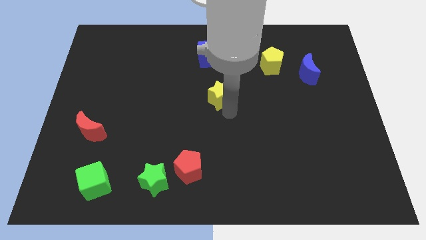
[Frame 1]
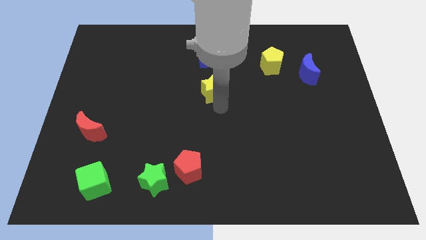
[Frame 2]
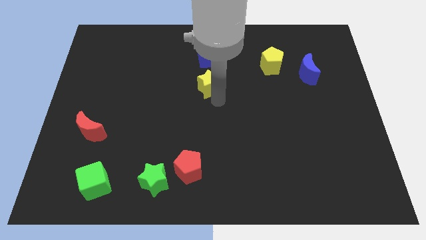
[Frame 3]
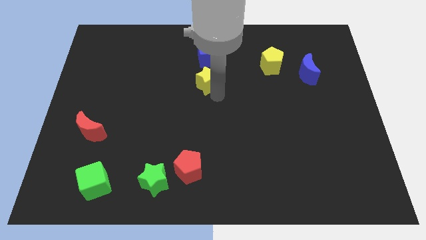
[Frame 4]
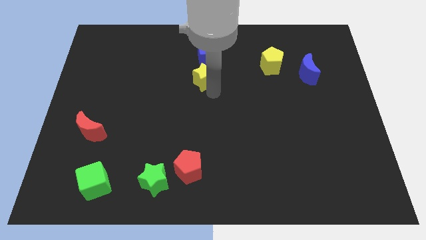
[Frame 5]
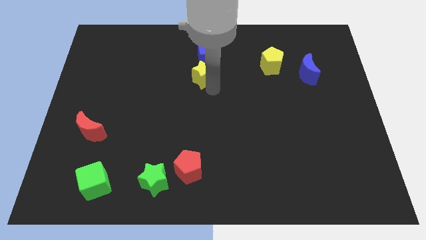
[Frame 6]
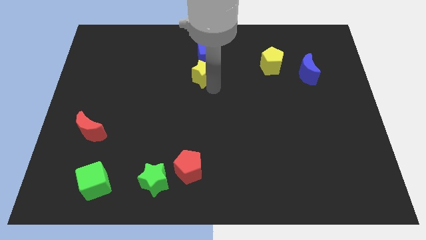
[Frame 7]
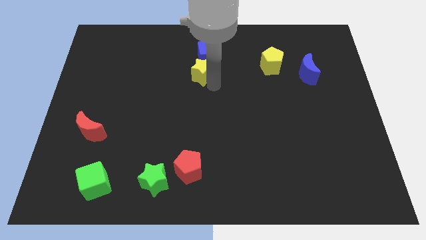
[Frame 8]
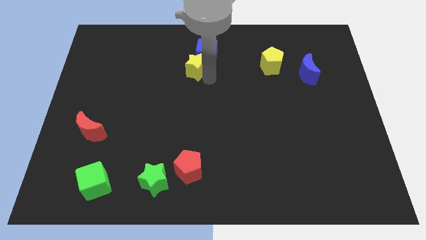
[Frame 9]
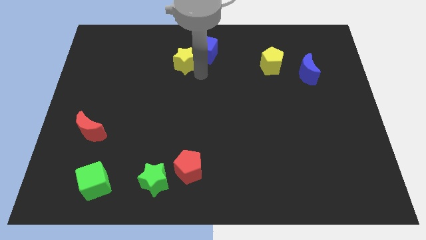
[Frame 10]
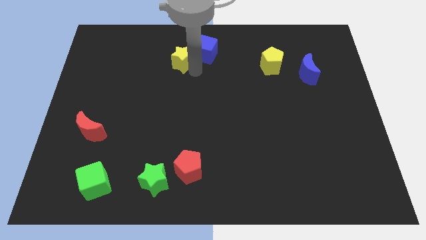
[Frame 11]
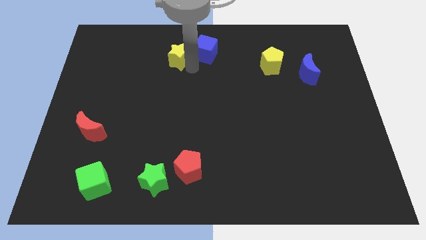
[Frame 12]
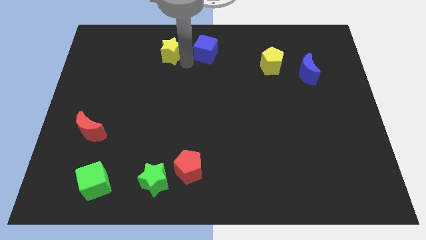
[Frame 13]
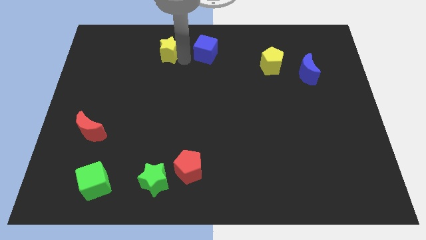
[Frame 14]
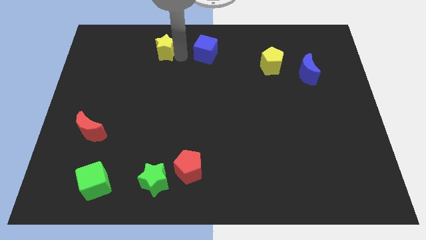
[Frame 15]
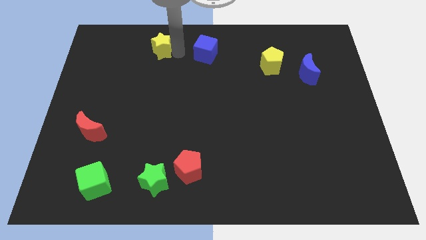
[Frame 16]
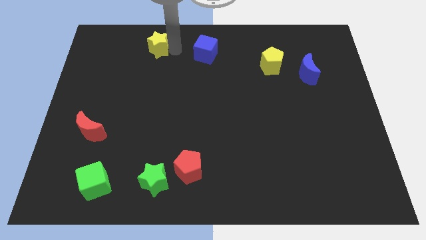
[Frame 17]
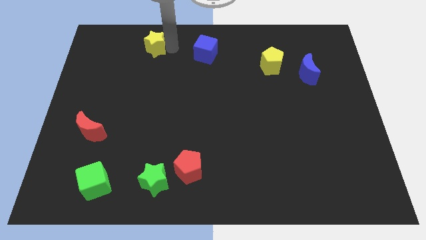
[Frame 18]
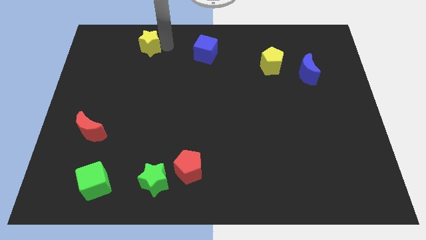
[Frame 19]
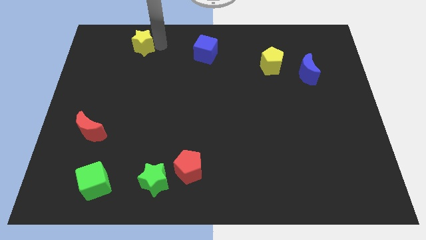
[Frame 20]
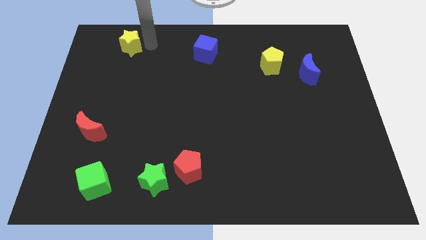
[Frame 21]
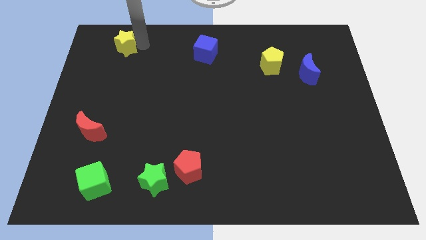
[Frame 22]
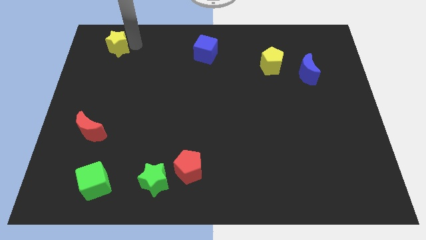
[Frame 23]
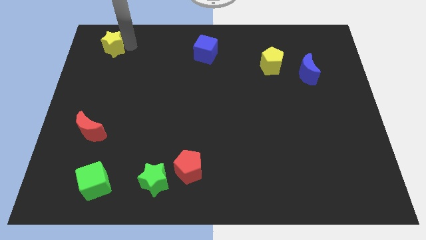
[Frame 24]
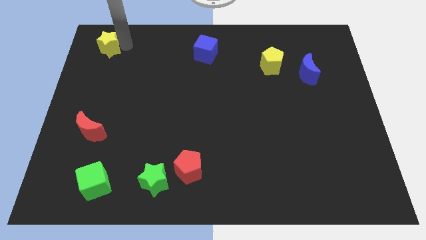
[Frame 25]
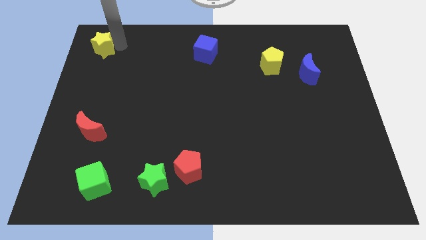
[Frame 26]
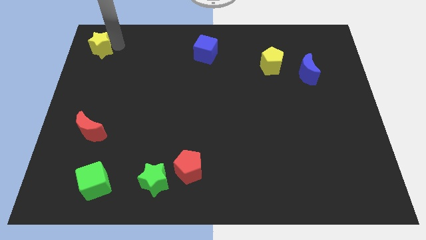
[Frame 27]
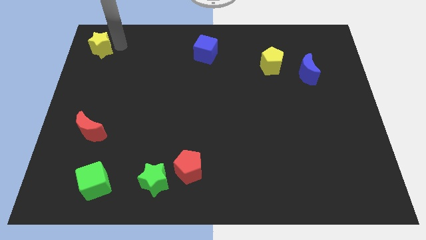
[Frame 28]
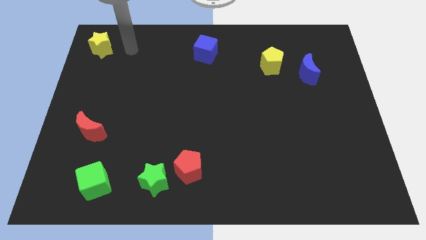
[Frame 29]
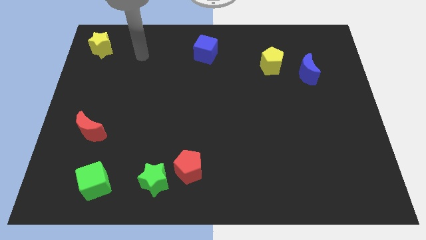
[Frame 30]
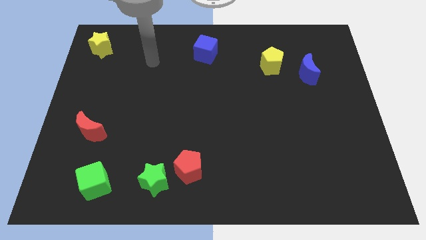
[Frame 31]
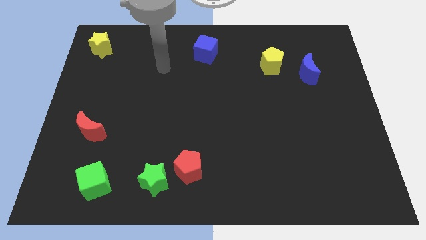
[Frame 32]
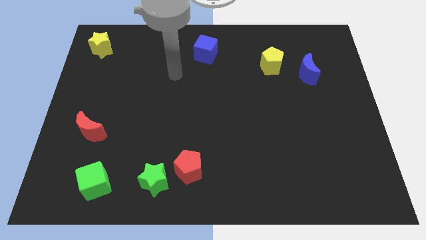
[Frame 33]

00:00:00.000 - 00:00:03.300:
place the yellow star above the red moon

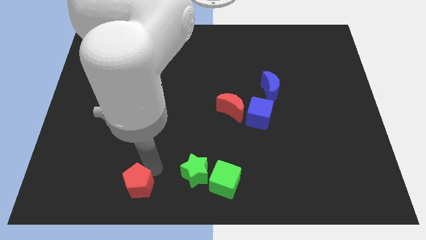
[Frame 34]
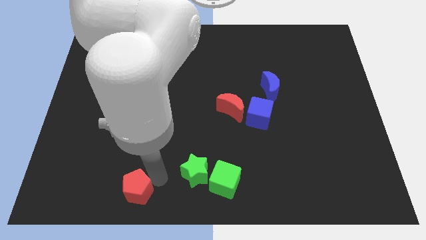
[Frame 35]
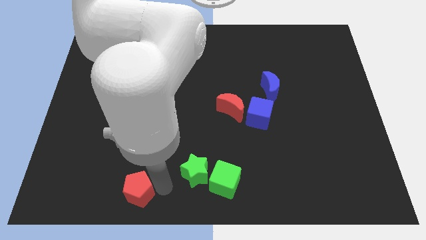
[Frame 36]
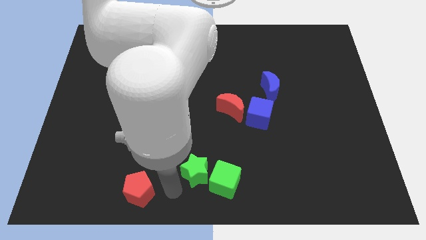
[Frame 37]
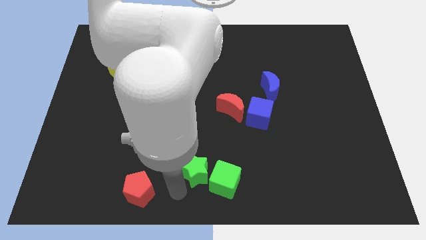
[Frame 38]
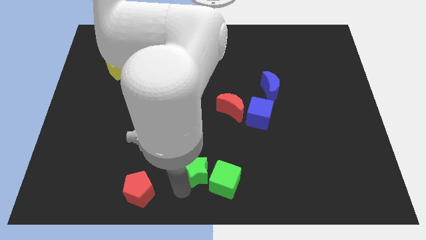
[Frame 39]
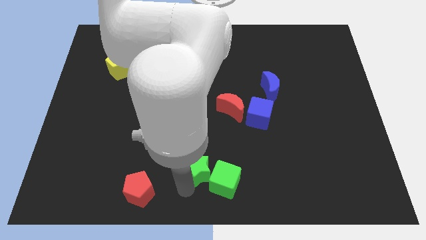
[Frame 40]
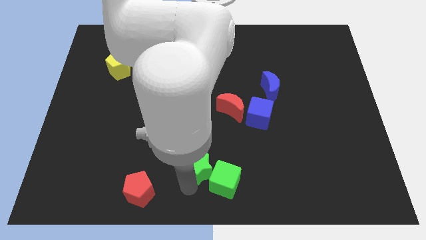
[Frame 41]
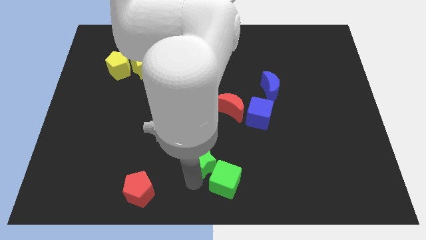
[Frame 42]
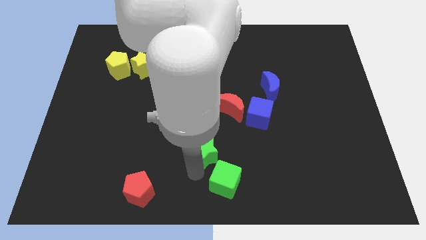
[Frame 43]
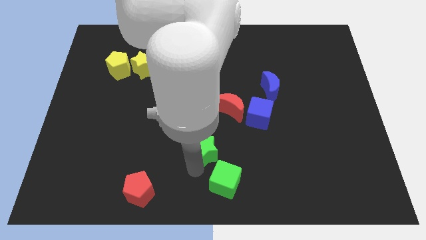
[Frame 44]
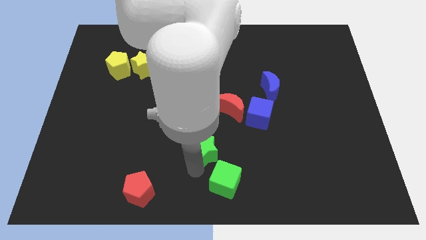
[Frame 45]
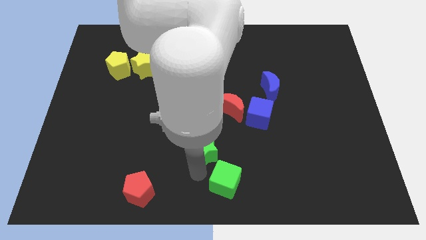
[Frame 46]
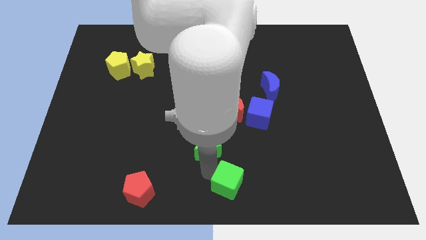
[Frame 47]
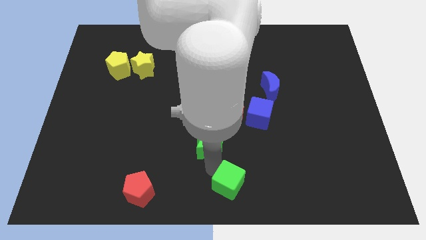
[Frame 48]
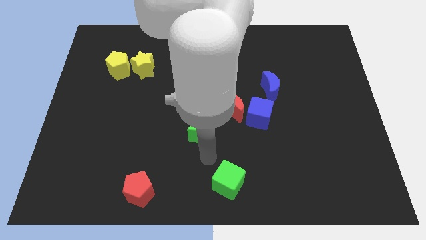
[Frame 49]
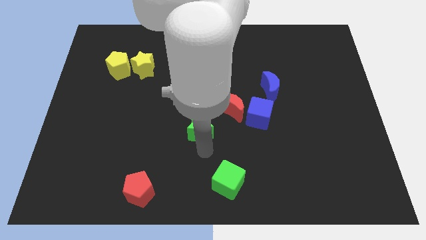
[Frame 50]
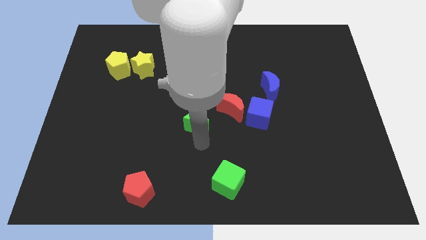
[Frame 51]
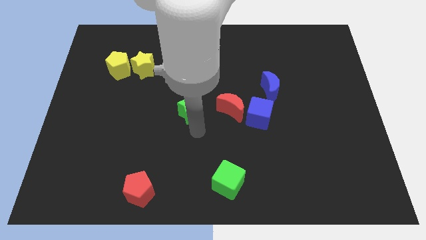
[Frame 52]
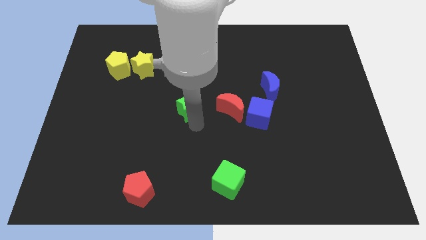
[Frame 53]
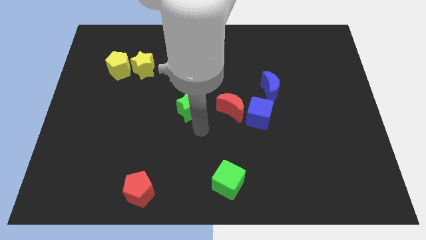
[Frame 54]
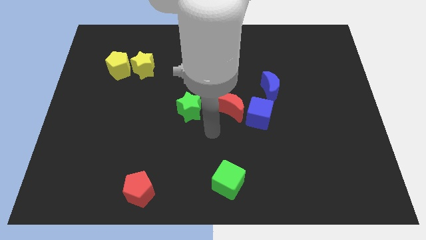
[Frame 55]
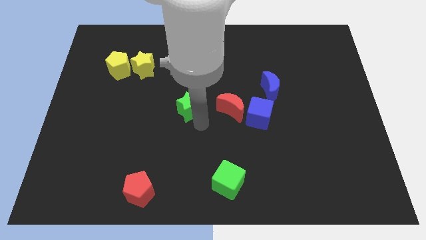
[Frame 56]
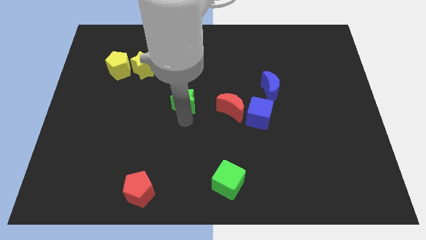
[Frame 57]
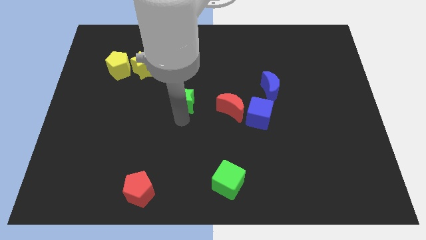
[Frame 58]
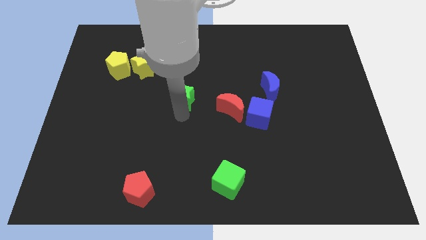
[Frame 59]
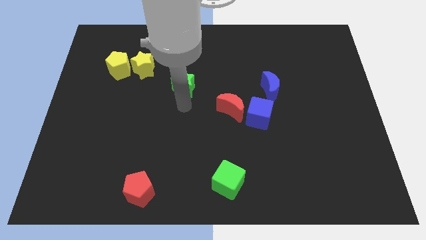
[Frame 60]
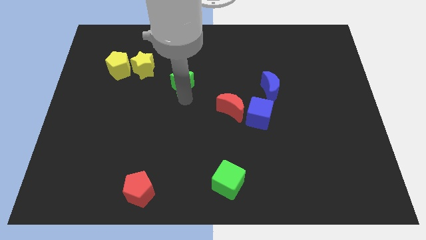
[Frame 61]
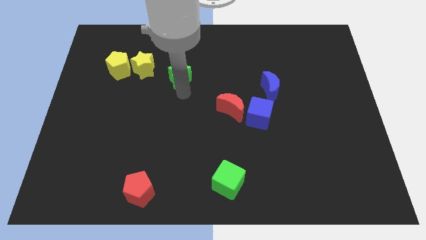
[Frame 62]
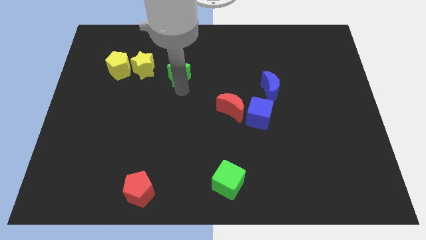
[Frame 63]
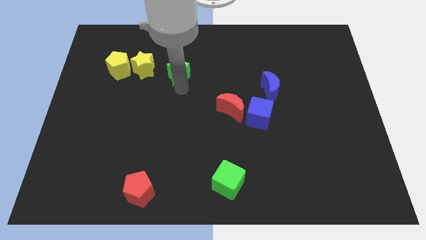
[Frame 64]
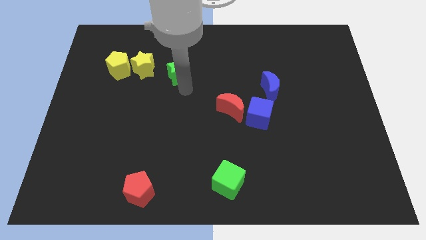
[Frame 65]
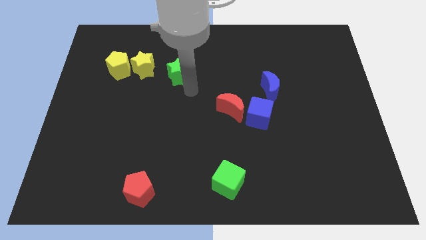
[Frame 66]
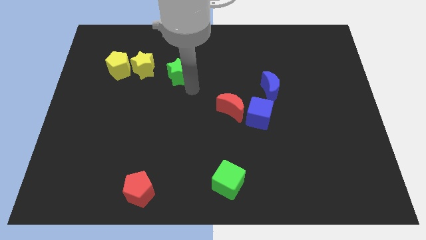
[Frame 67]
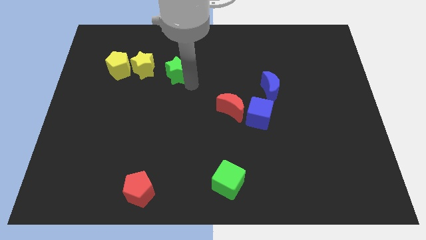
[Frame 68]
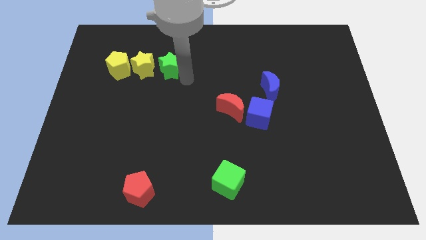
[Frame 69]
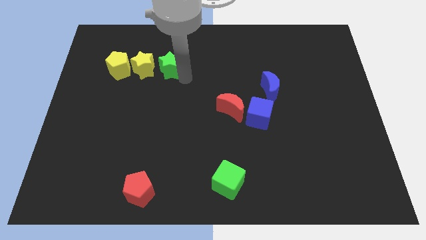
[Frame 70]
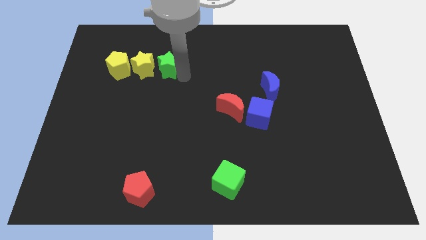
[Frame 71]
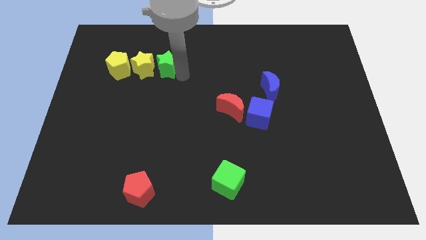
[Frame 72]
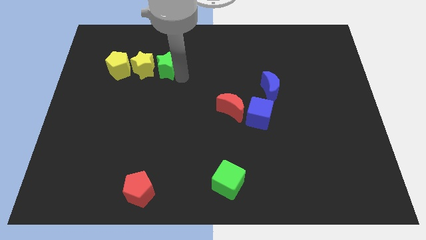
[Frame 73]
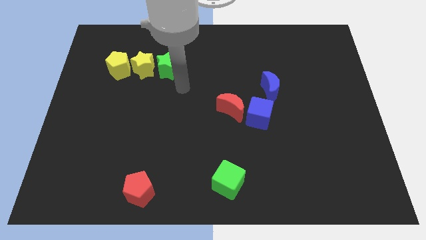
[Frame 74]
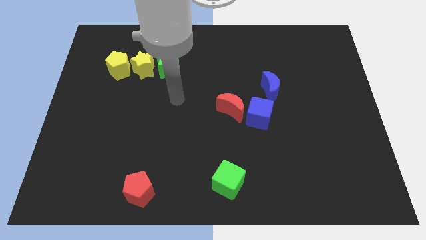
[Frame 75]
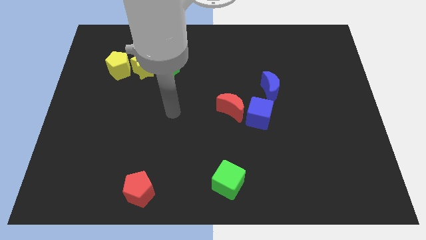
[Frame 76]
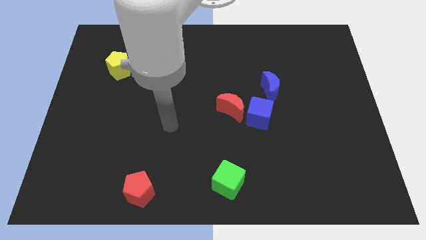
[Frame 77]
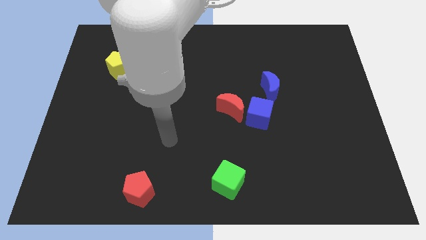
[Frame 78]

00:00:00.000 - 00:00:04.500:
move the green star right to the yellow star

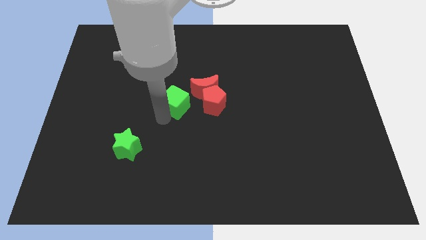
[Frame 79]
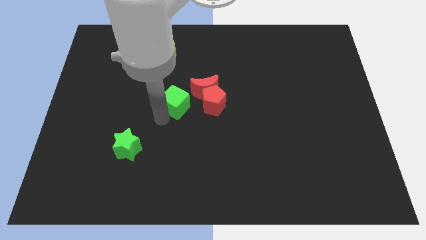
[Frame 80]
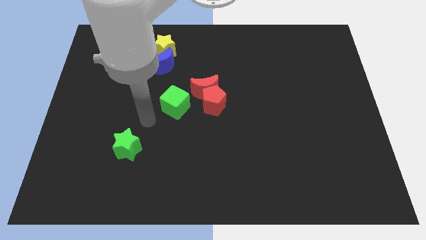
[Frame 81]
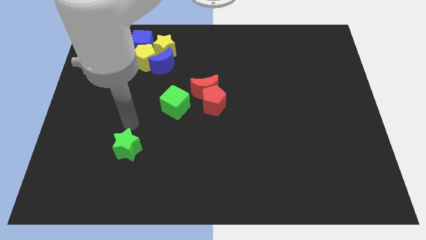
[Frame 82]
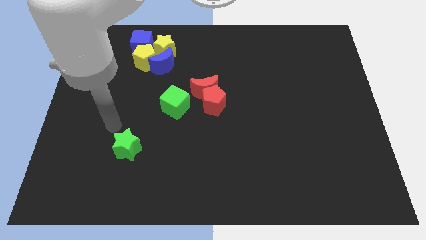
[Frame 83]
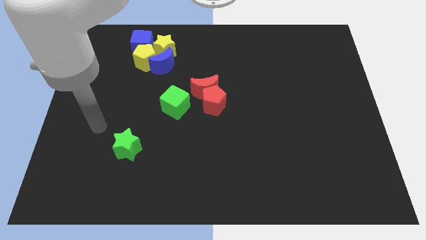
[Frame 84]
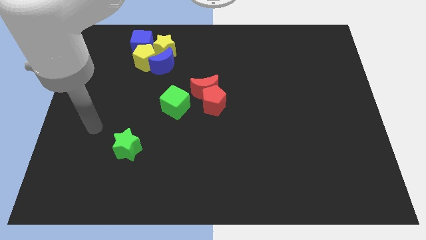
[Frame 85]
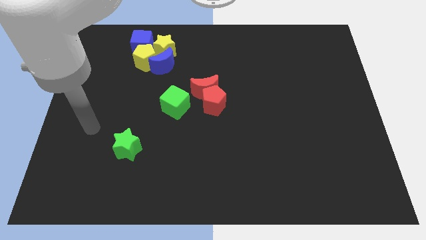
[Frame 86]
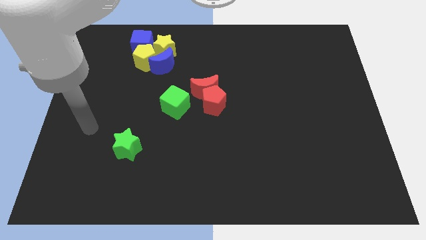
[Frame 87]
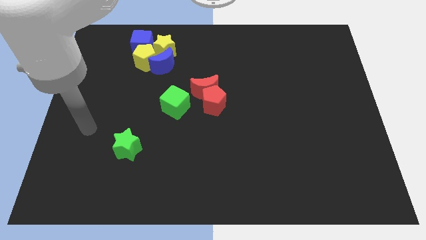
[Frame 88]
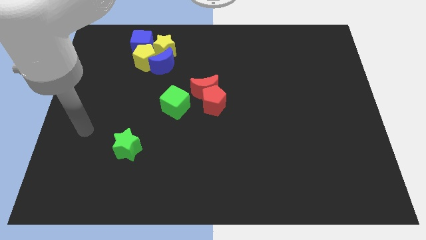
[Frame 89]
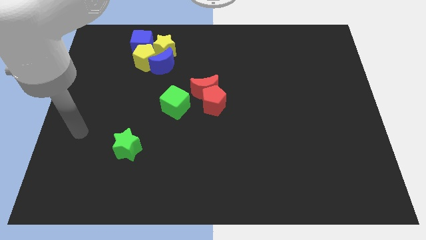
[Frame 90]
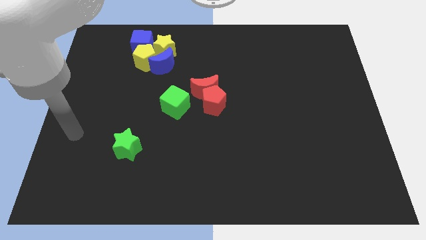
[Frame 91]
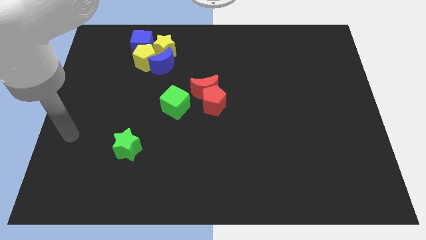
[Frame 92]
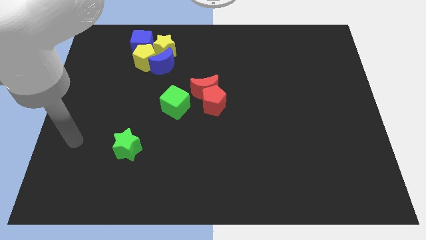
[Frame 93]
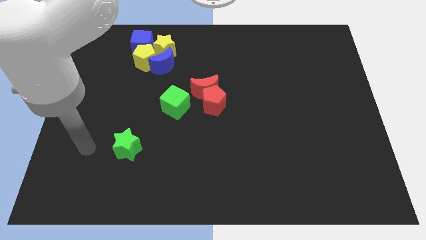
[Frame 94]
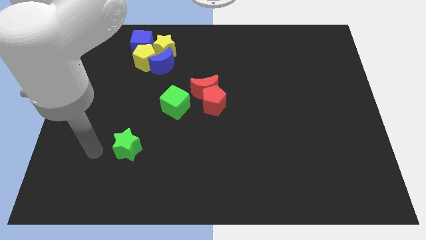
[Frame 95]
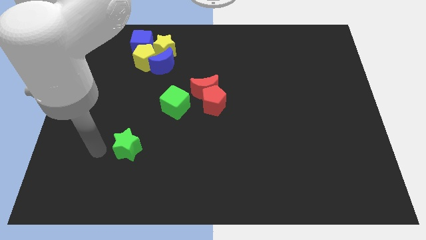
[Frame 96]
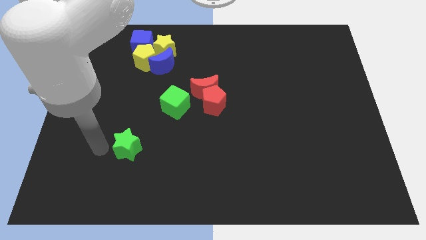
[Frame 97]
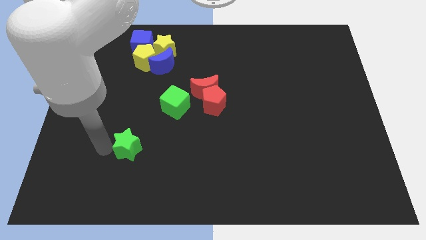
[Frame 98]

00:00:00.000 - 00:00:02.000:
move your arm away form the green cube
